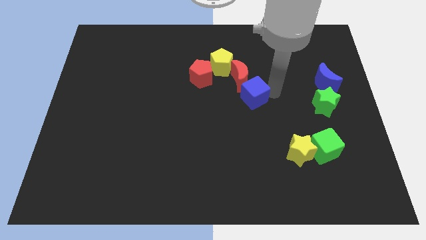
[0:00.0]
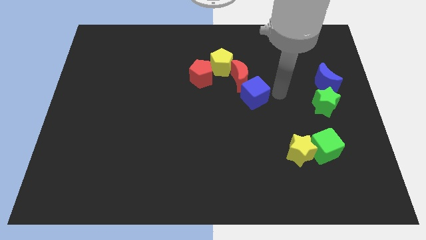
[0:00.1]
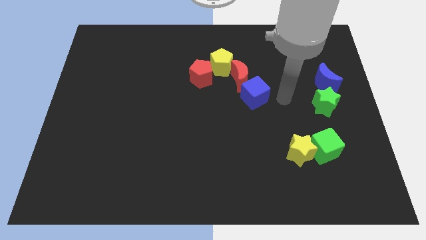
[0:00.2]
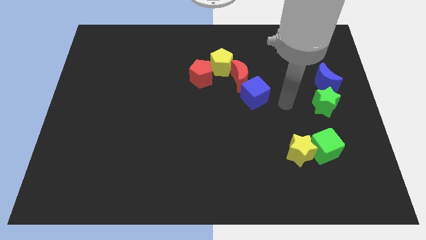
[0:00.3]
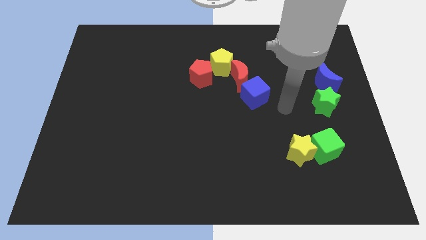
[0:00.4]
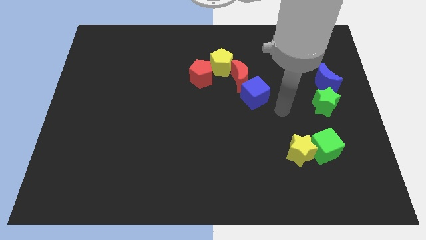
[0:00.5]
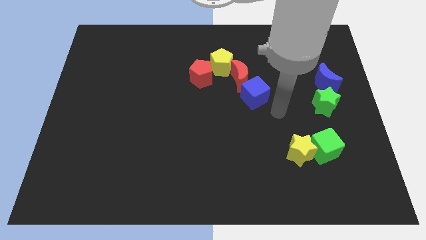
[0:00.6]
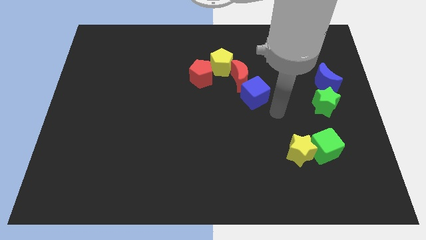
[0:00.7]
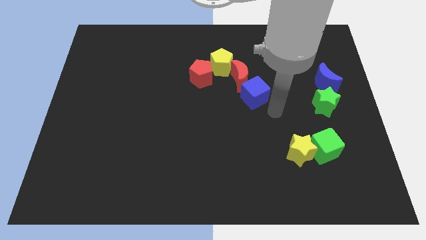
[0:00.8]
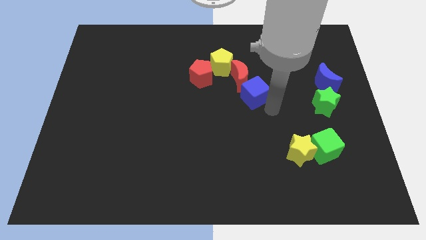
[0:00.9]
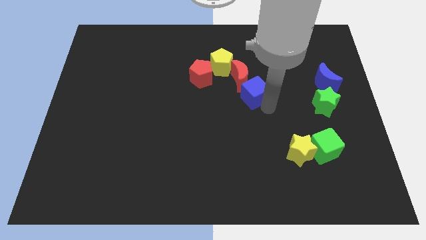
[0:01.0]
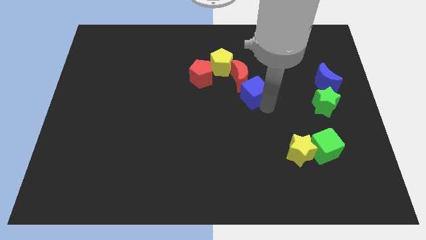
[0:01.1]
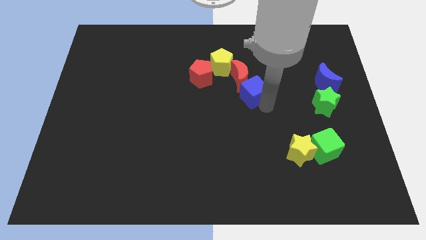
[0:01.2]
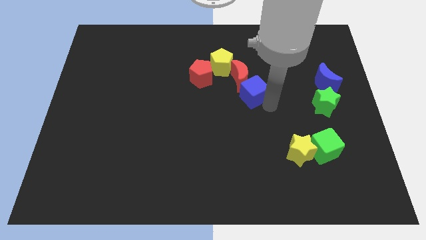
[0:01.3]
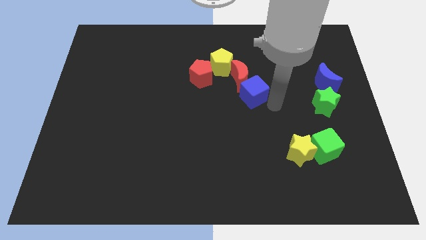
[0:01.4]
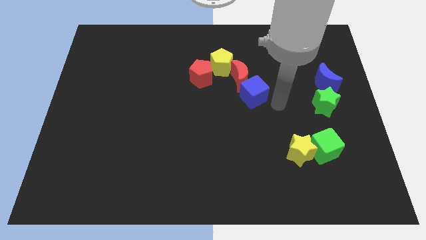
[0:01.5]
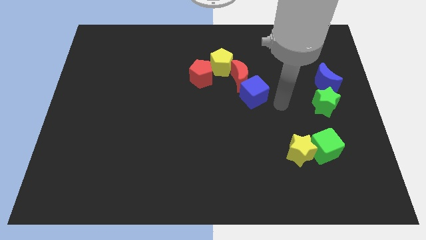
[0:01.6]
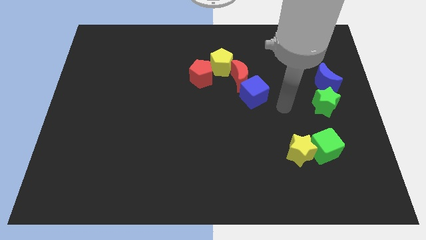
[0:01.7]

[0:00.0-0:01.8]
place the blue cube at the bottom right side of red moon

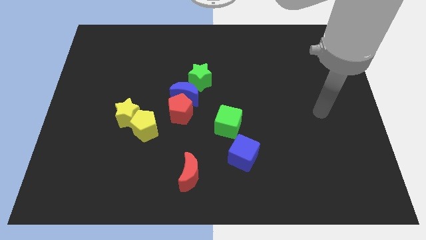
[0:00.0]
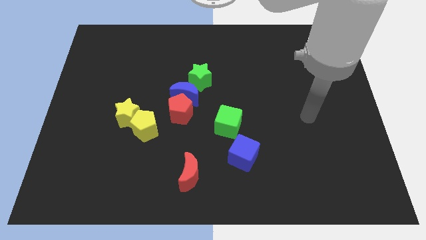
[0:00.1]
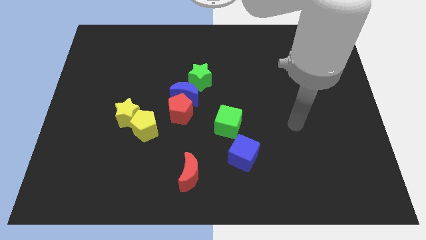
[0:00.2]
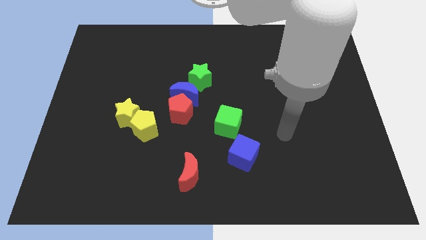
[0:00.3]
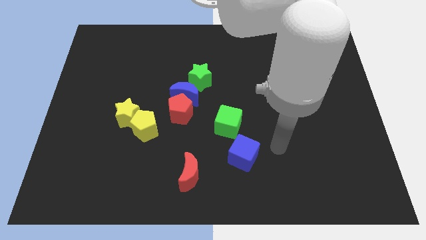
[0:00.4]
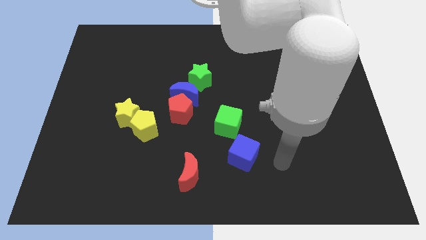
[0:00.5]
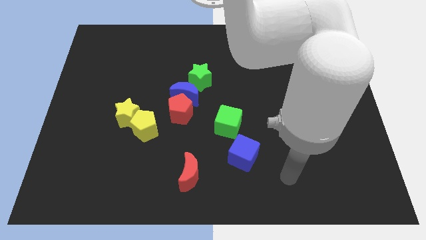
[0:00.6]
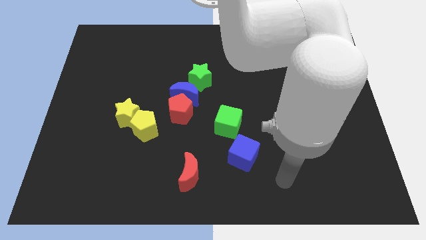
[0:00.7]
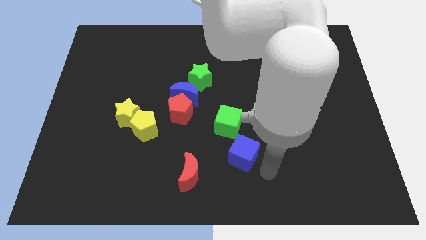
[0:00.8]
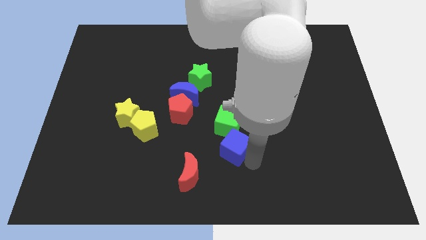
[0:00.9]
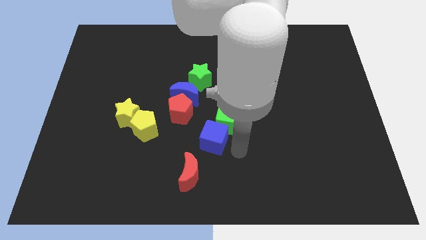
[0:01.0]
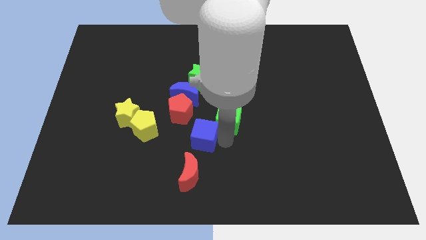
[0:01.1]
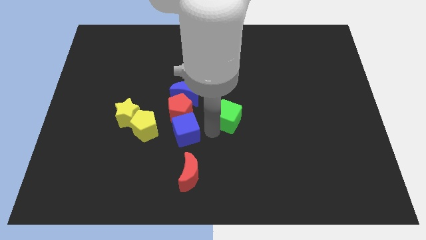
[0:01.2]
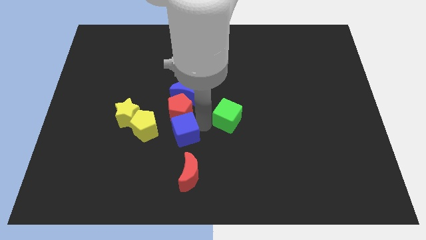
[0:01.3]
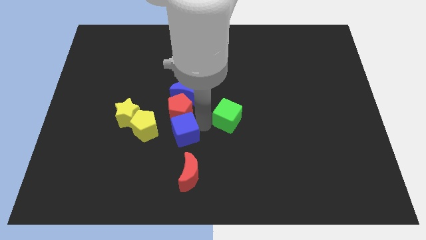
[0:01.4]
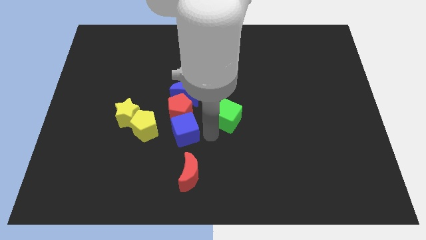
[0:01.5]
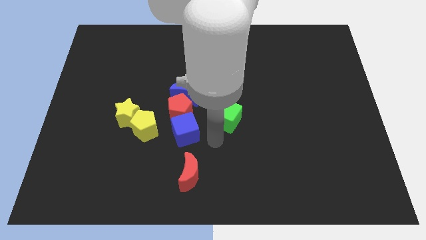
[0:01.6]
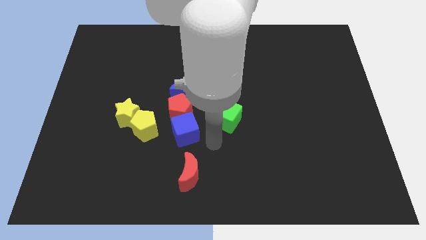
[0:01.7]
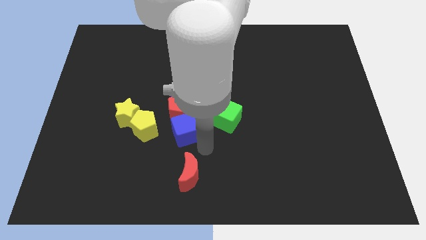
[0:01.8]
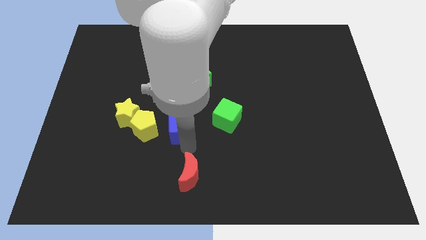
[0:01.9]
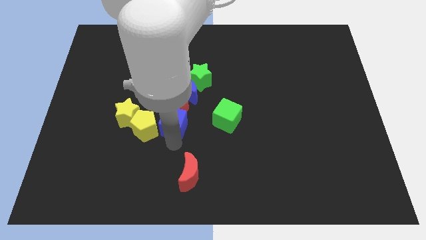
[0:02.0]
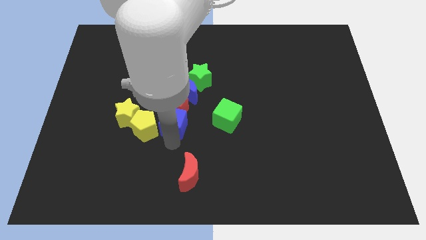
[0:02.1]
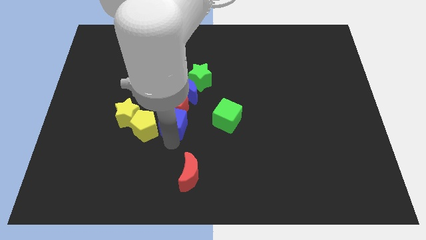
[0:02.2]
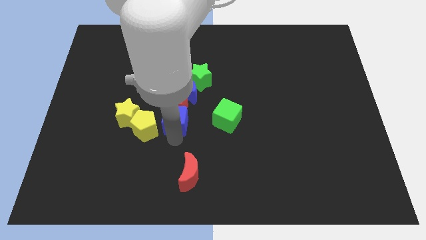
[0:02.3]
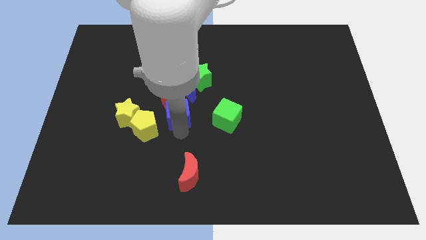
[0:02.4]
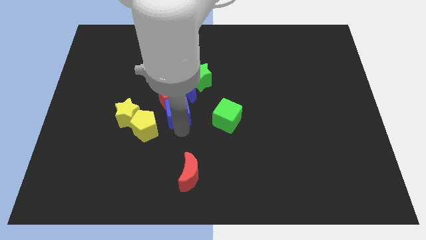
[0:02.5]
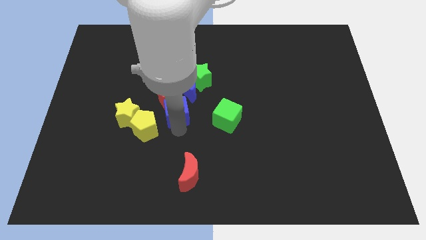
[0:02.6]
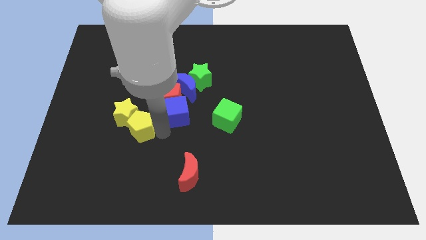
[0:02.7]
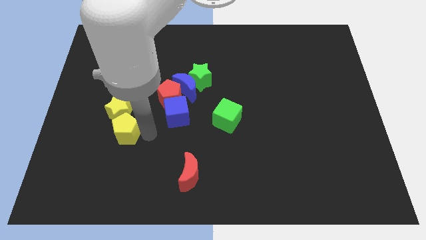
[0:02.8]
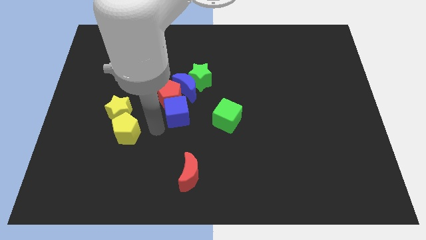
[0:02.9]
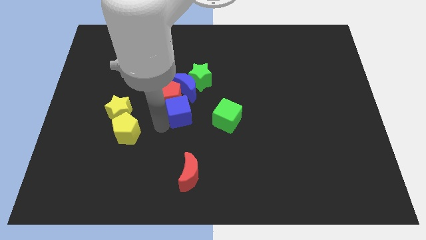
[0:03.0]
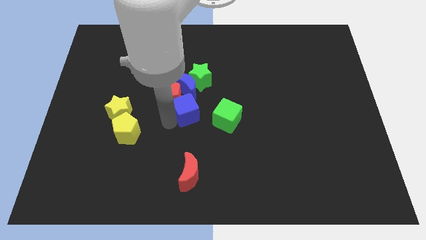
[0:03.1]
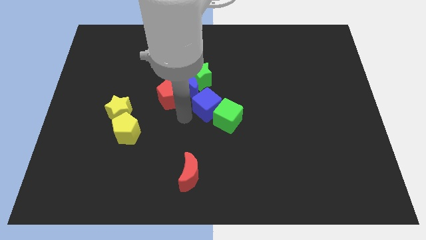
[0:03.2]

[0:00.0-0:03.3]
slide the blue cube parallel left to the green cube

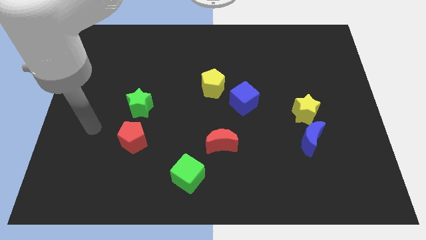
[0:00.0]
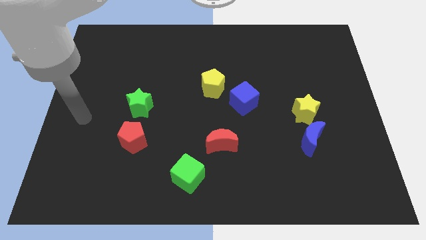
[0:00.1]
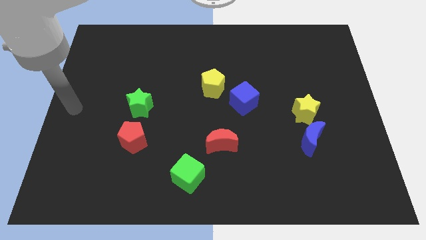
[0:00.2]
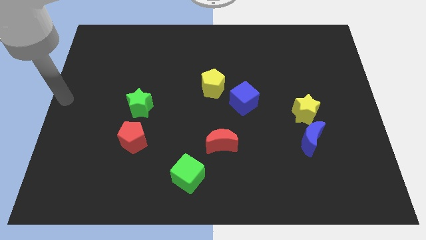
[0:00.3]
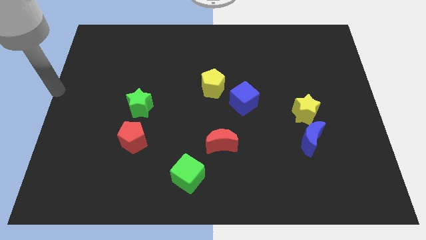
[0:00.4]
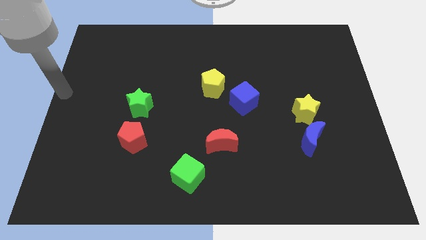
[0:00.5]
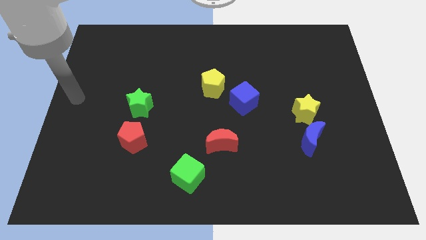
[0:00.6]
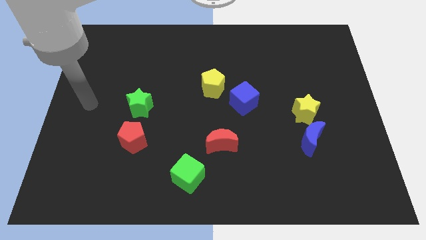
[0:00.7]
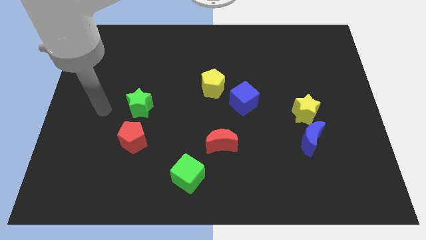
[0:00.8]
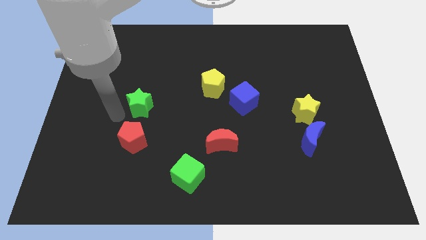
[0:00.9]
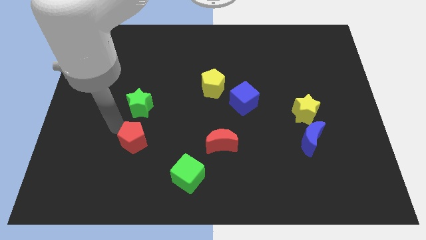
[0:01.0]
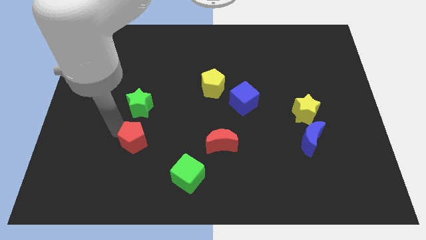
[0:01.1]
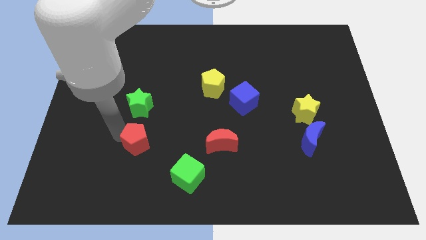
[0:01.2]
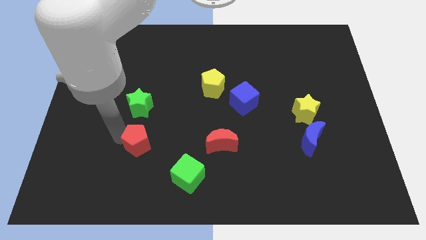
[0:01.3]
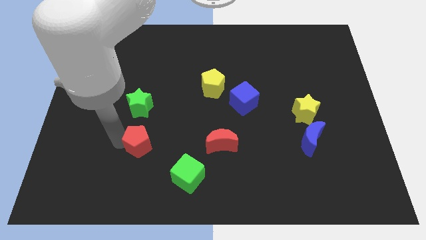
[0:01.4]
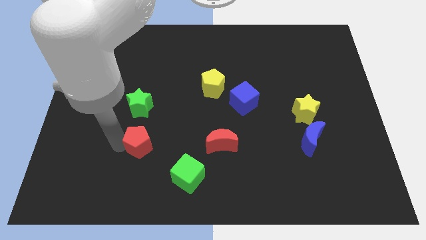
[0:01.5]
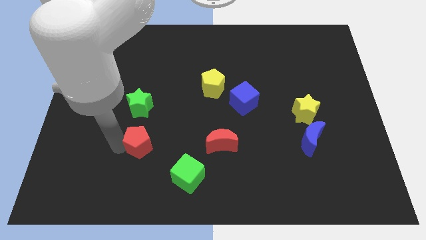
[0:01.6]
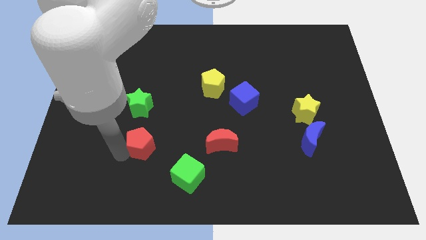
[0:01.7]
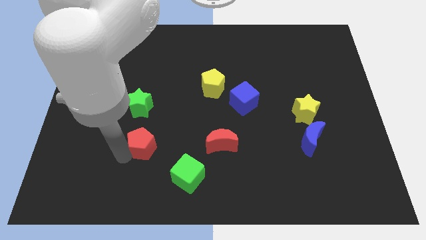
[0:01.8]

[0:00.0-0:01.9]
slightly push the red pentagon to the bottom of green star

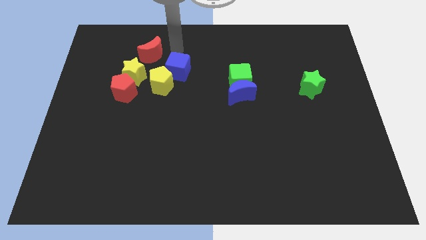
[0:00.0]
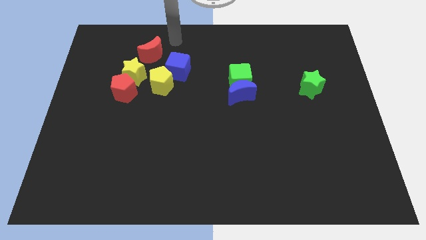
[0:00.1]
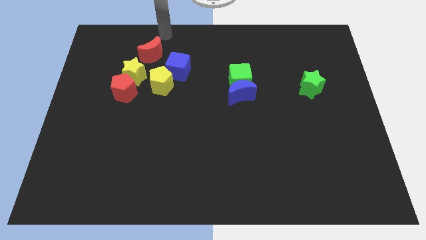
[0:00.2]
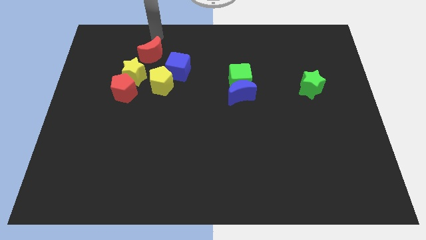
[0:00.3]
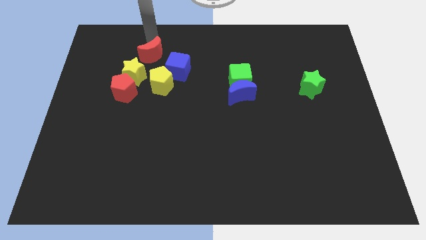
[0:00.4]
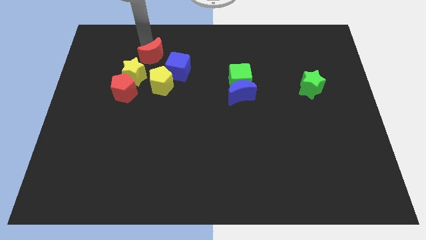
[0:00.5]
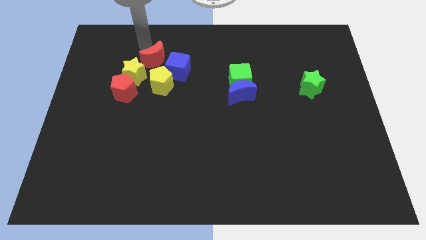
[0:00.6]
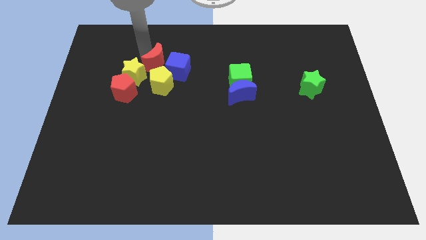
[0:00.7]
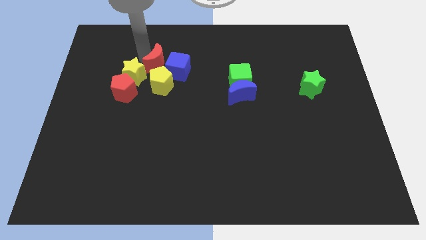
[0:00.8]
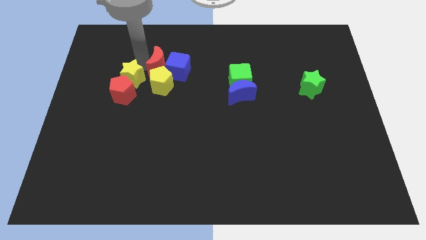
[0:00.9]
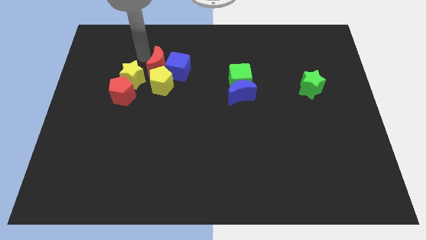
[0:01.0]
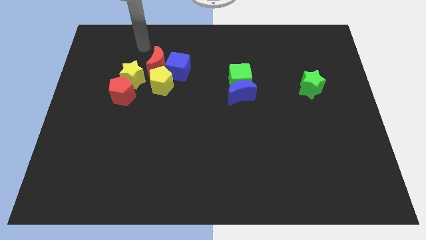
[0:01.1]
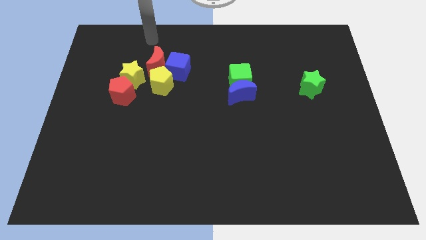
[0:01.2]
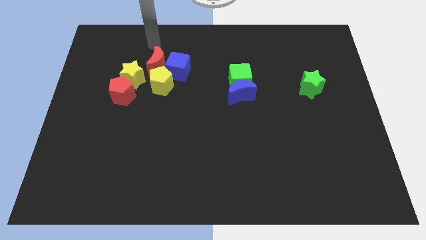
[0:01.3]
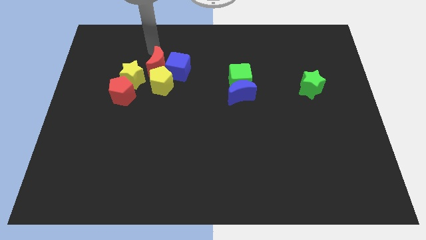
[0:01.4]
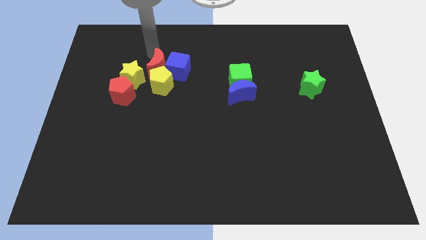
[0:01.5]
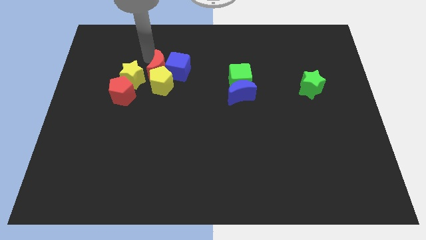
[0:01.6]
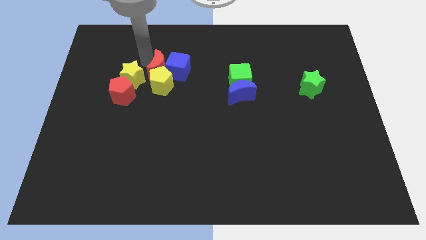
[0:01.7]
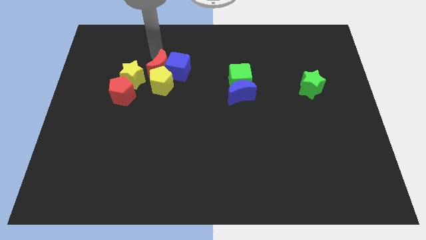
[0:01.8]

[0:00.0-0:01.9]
place the red crescent to the left of the blue cube
